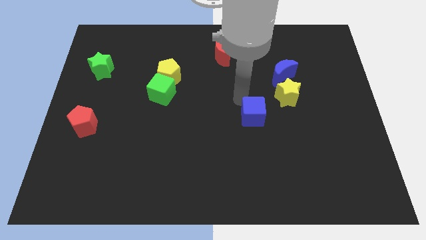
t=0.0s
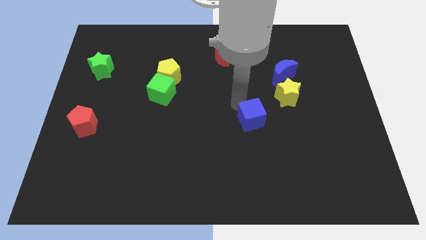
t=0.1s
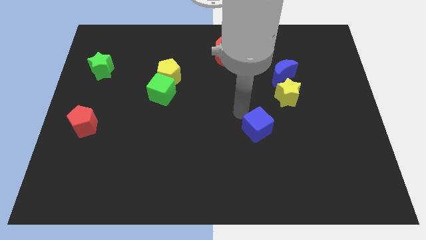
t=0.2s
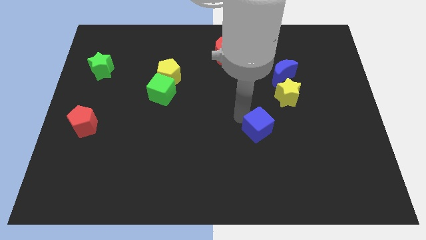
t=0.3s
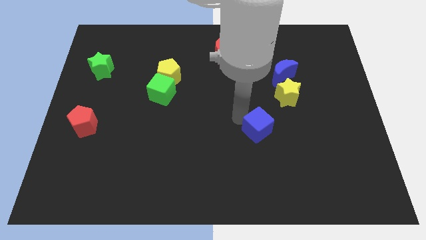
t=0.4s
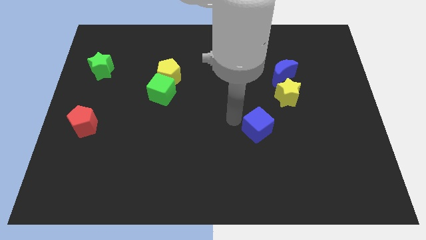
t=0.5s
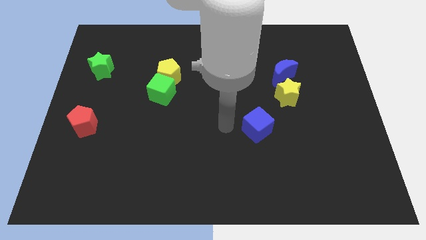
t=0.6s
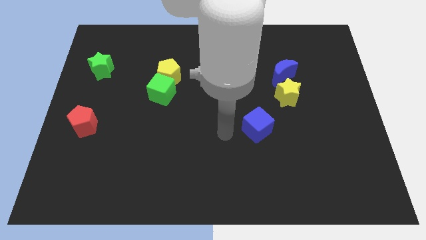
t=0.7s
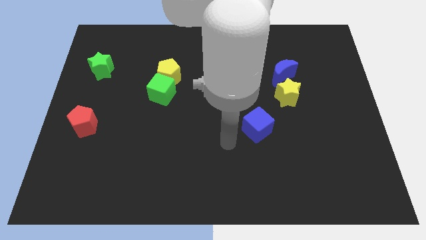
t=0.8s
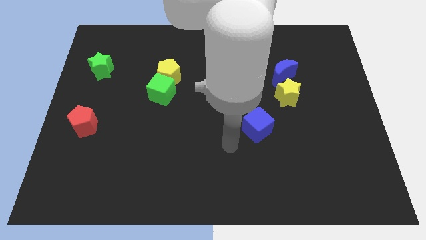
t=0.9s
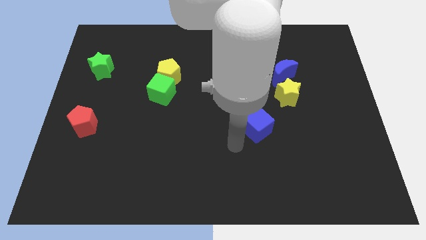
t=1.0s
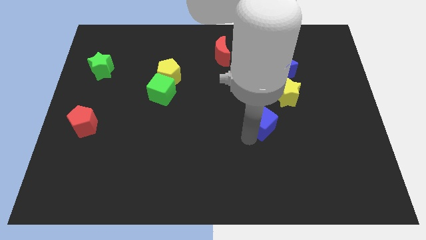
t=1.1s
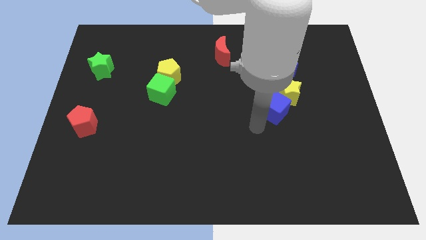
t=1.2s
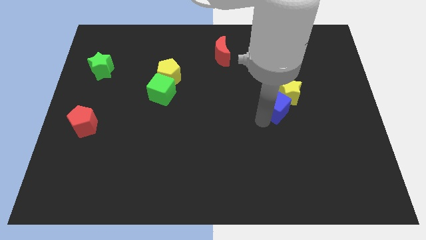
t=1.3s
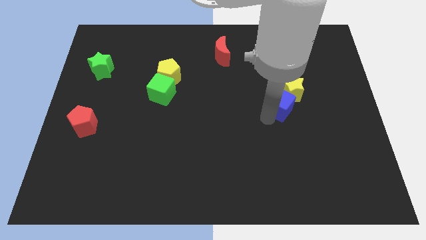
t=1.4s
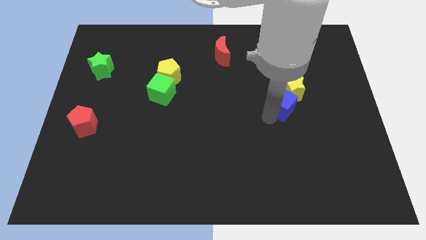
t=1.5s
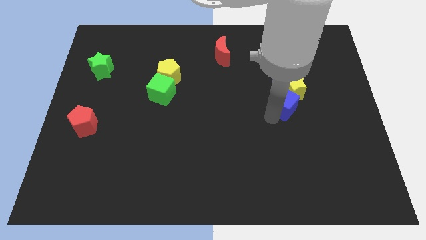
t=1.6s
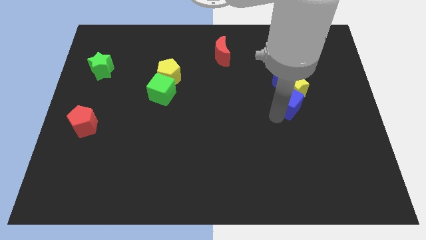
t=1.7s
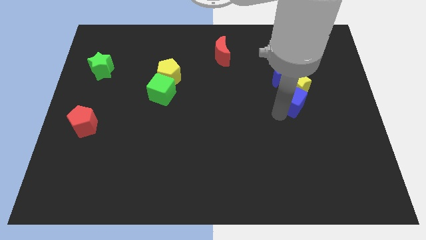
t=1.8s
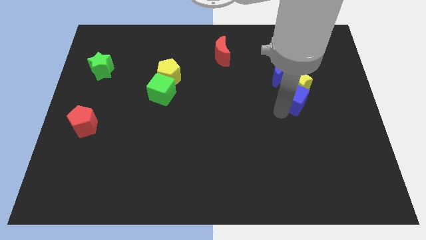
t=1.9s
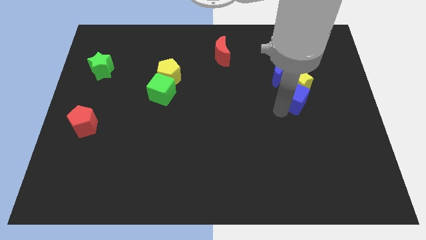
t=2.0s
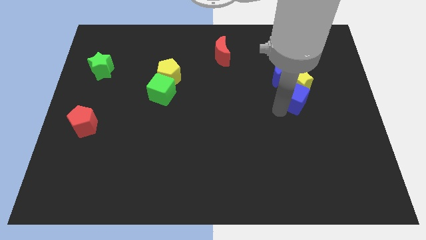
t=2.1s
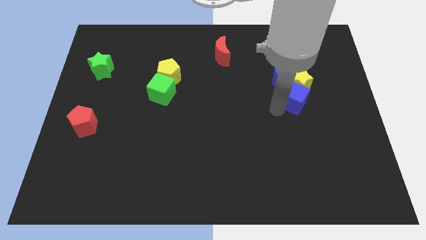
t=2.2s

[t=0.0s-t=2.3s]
move the blue cube into the yellow star

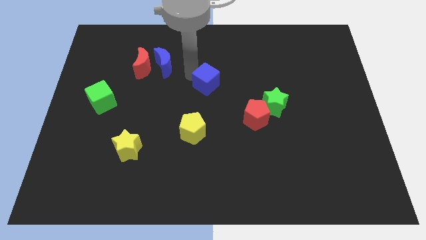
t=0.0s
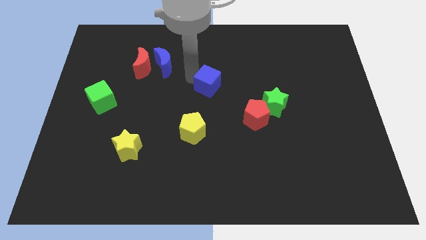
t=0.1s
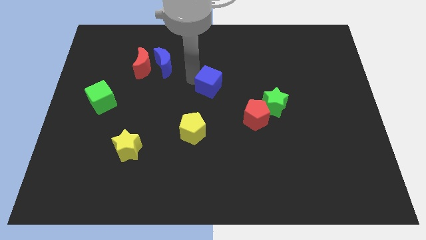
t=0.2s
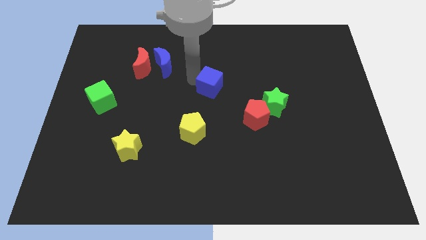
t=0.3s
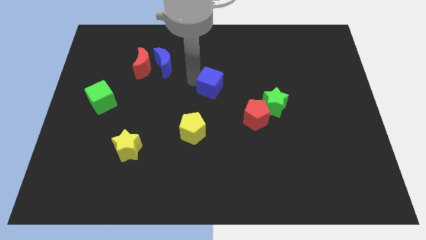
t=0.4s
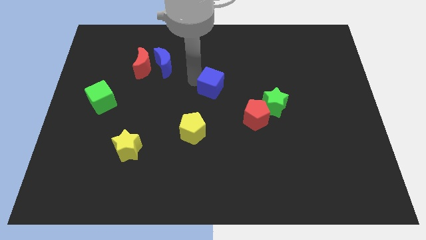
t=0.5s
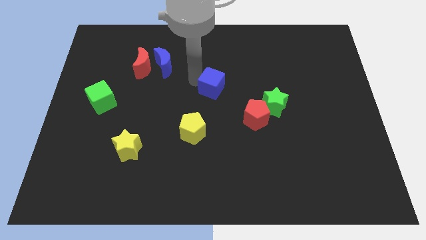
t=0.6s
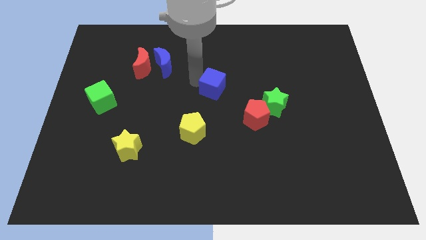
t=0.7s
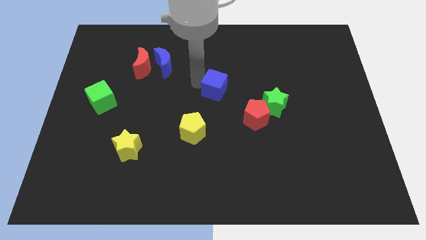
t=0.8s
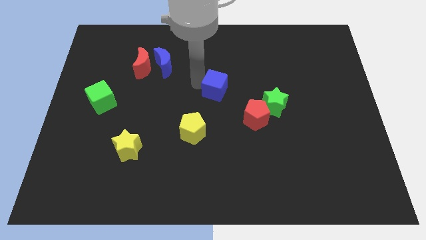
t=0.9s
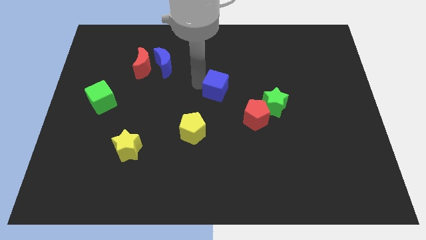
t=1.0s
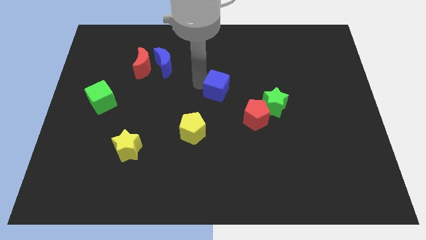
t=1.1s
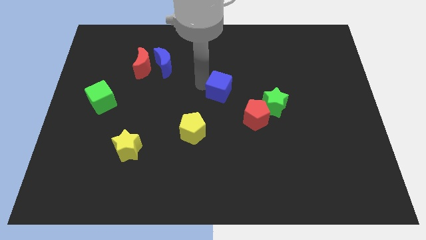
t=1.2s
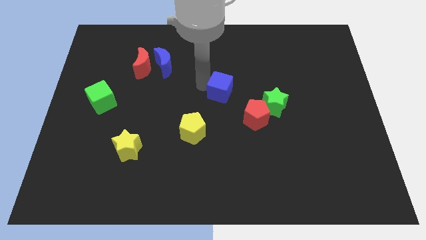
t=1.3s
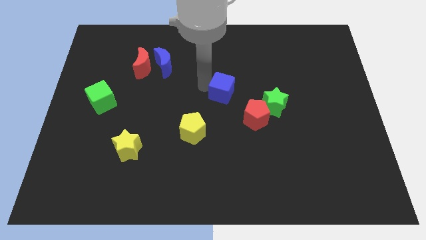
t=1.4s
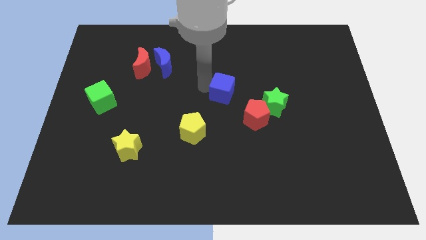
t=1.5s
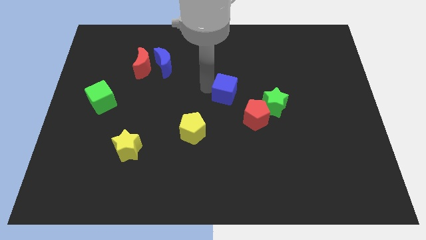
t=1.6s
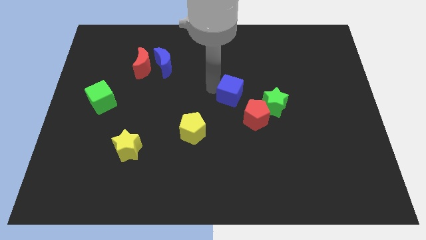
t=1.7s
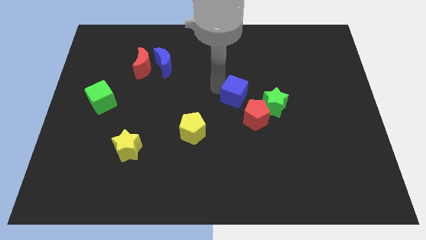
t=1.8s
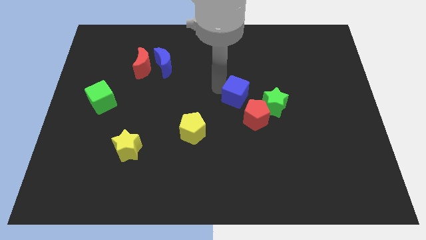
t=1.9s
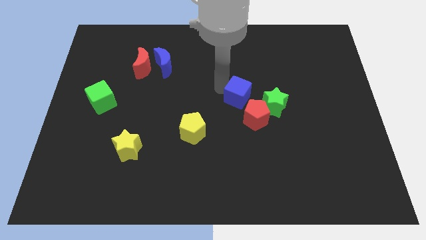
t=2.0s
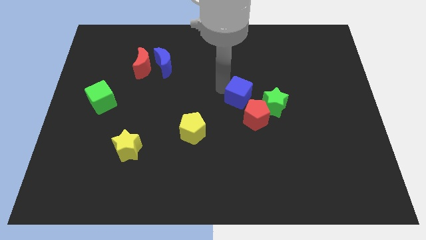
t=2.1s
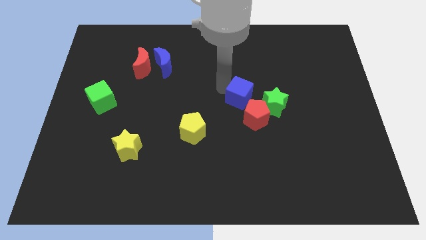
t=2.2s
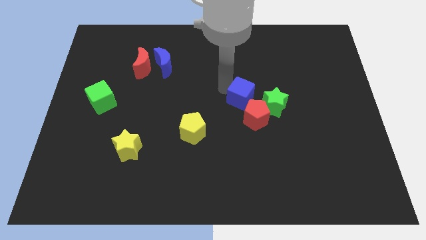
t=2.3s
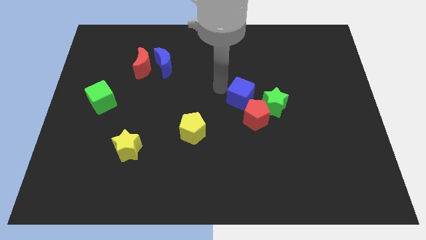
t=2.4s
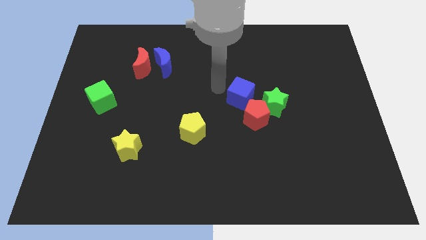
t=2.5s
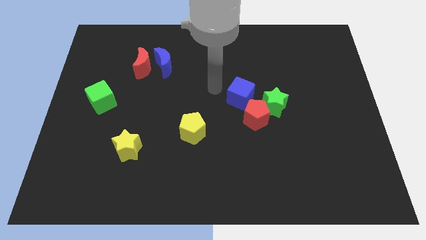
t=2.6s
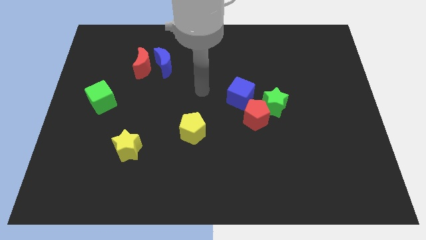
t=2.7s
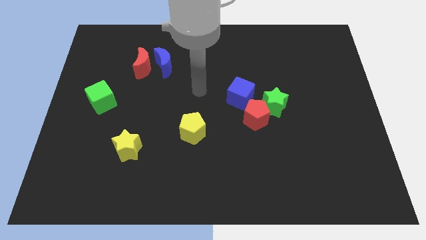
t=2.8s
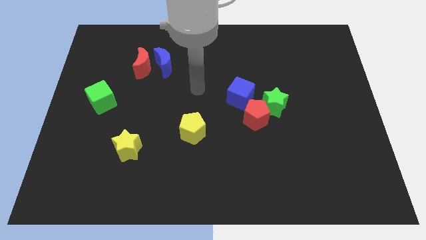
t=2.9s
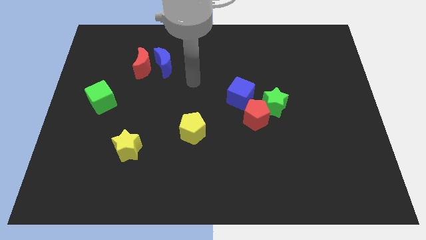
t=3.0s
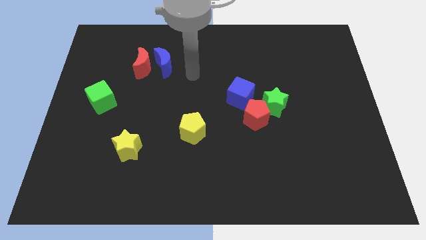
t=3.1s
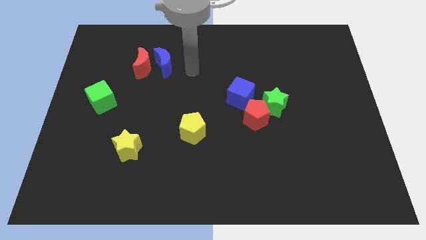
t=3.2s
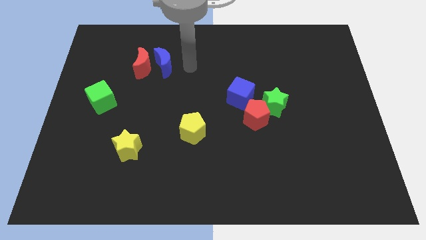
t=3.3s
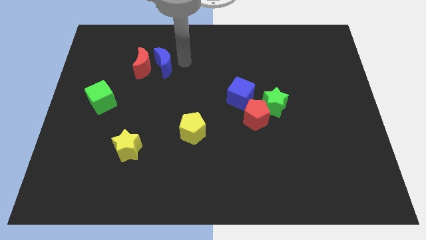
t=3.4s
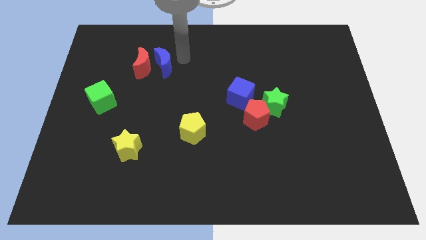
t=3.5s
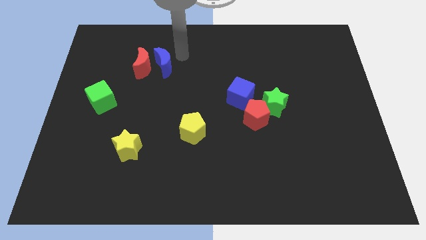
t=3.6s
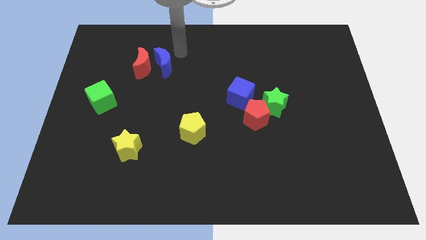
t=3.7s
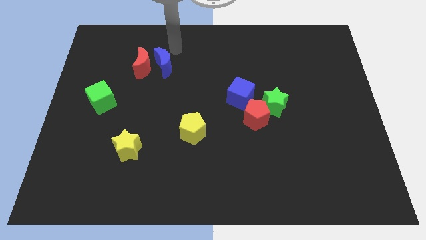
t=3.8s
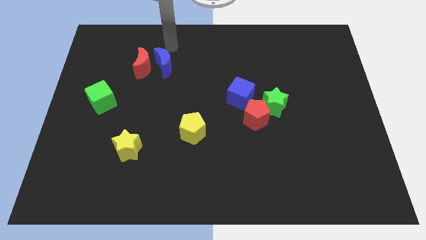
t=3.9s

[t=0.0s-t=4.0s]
place blue cube near red pentagon and green star

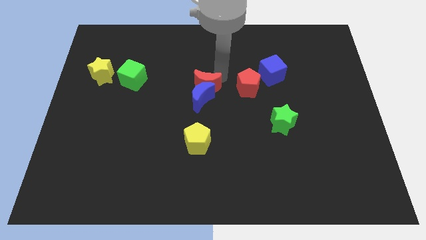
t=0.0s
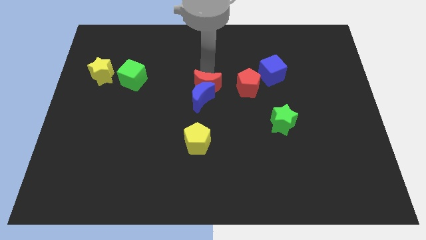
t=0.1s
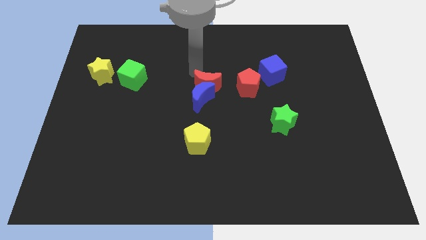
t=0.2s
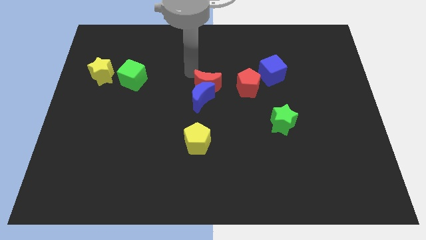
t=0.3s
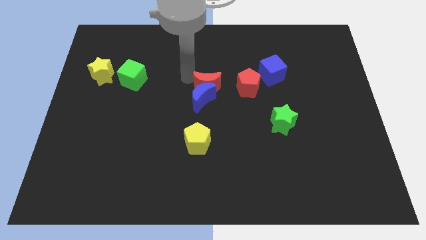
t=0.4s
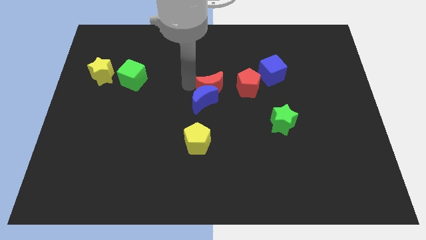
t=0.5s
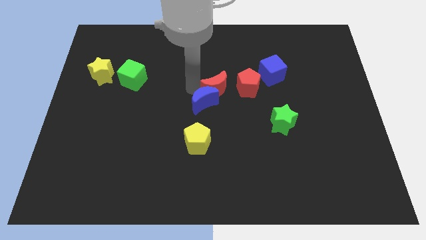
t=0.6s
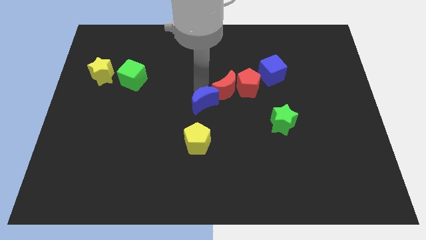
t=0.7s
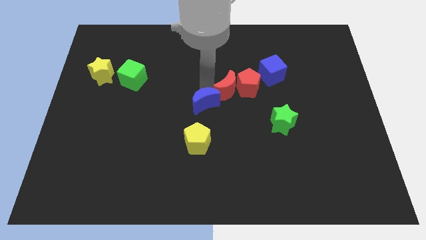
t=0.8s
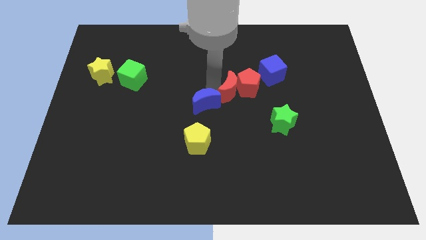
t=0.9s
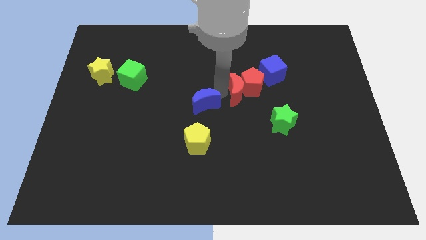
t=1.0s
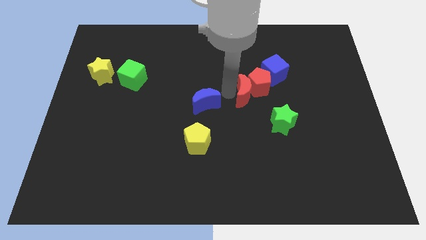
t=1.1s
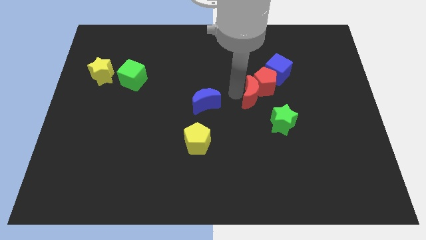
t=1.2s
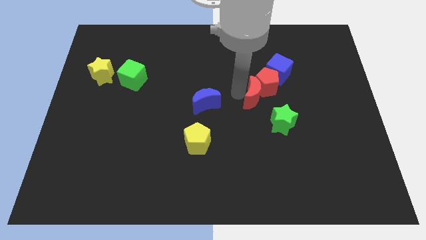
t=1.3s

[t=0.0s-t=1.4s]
push the red crescent into the red pentagon

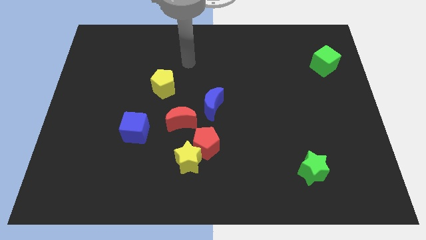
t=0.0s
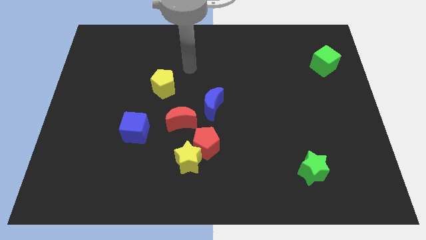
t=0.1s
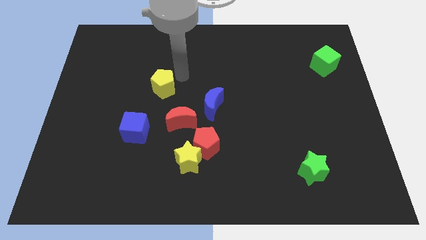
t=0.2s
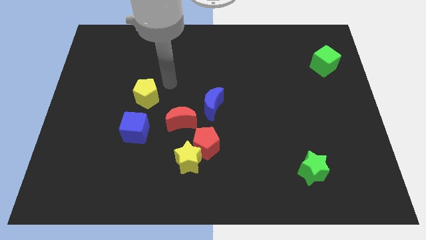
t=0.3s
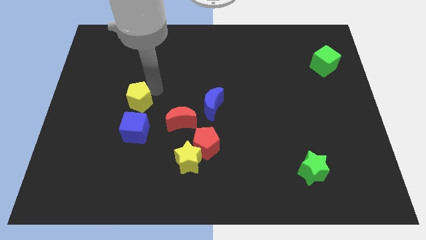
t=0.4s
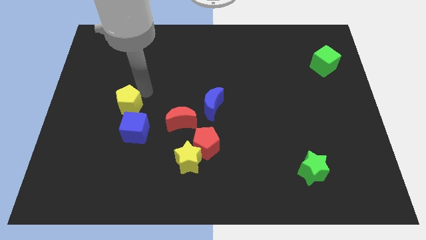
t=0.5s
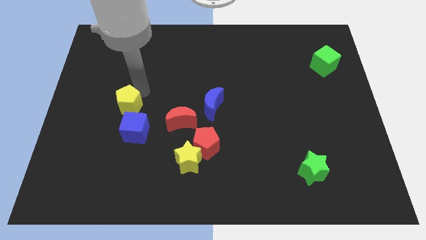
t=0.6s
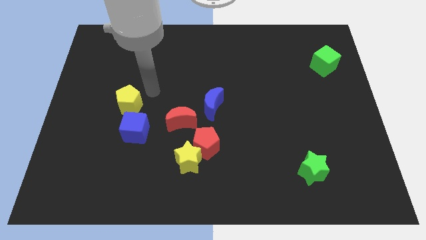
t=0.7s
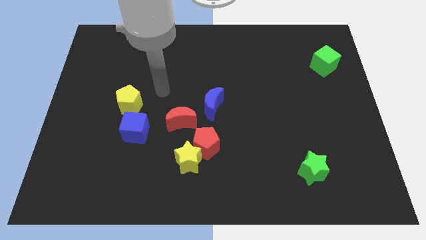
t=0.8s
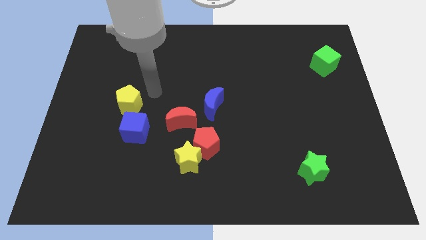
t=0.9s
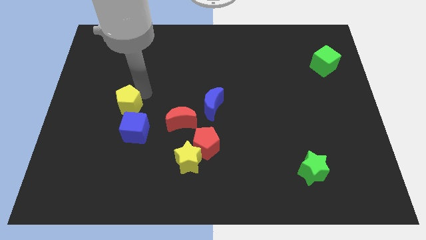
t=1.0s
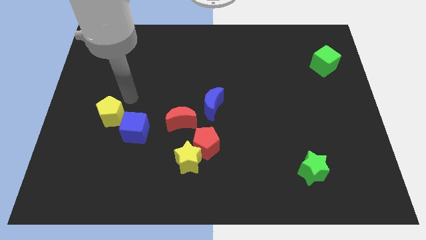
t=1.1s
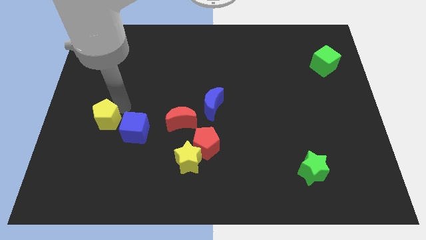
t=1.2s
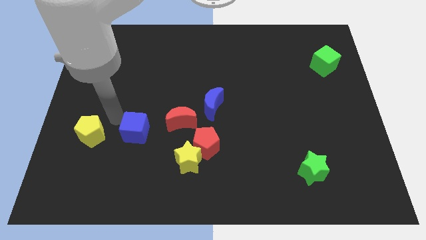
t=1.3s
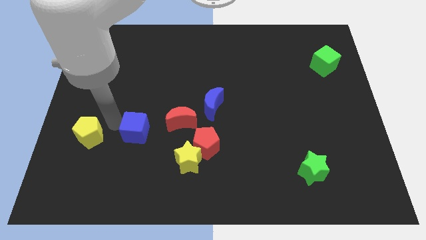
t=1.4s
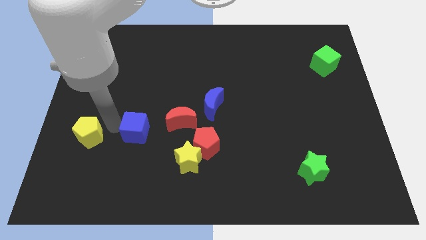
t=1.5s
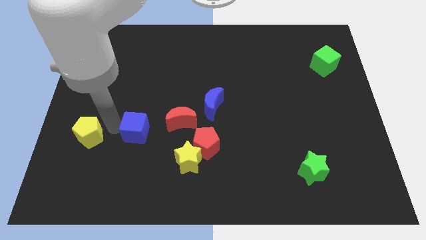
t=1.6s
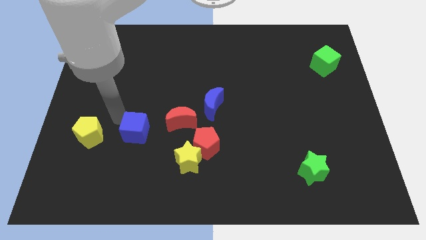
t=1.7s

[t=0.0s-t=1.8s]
move the yellow pentagon diagonal to the left of the blue cube
